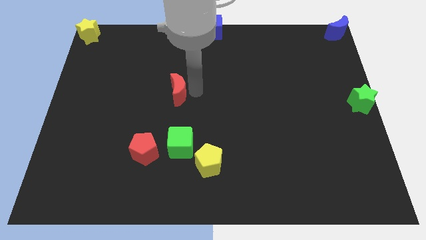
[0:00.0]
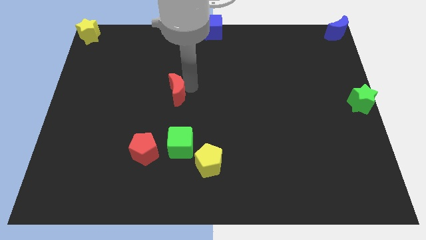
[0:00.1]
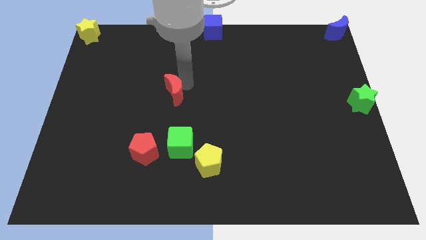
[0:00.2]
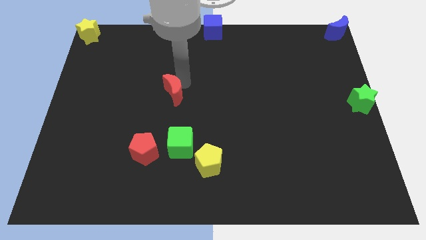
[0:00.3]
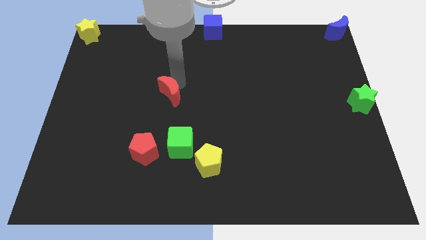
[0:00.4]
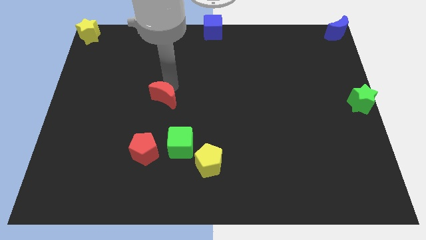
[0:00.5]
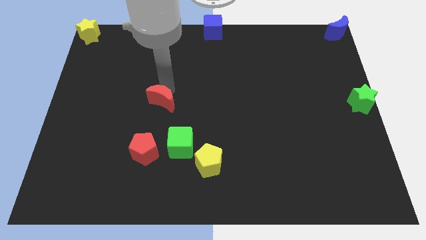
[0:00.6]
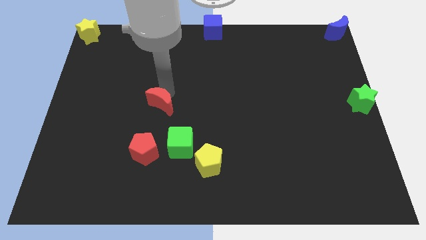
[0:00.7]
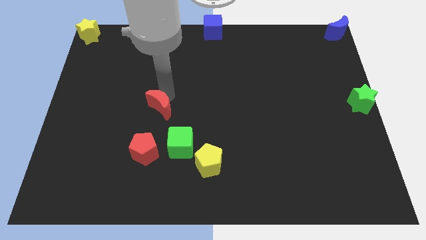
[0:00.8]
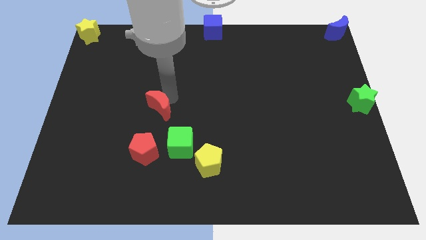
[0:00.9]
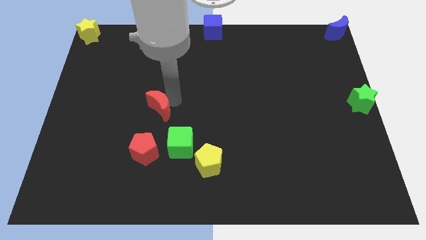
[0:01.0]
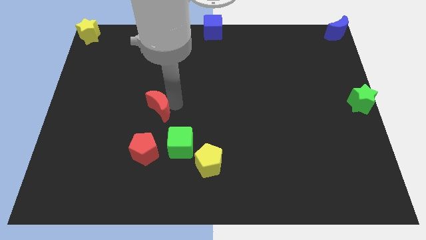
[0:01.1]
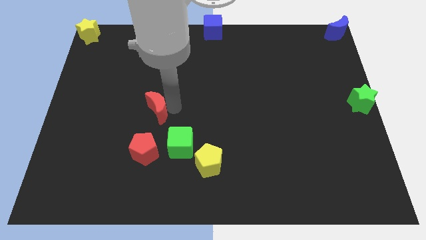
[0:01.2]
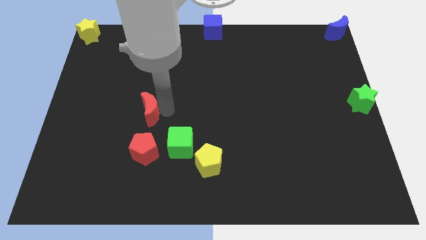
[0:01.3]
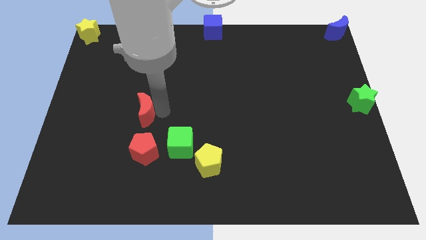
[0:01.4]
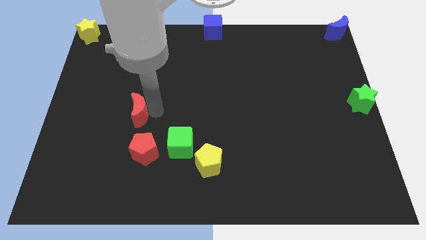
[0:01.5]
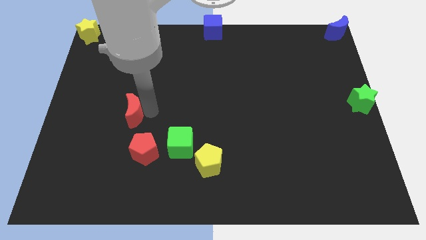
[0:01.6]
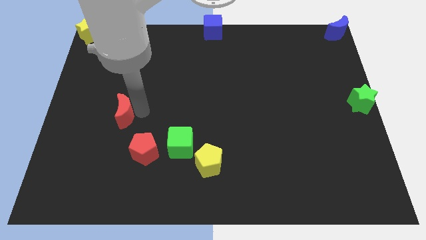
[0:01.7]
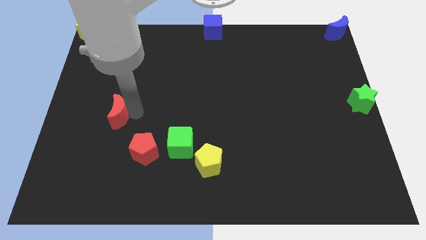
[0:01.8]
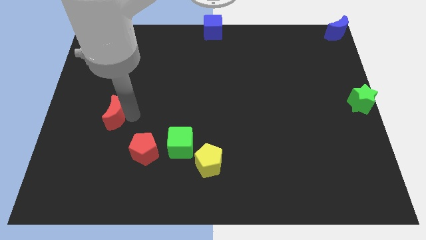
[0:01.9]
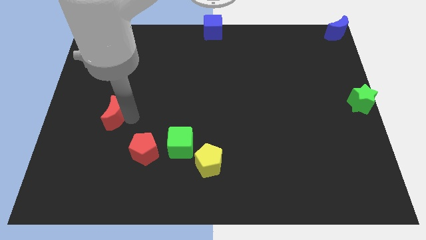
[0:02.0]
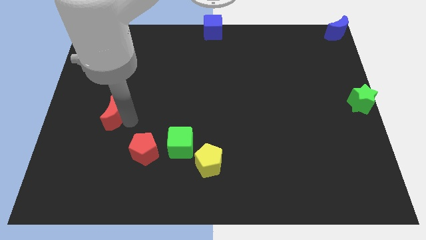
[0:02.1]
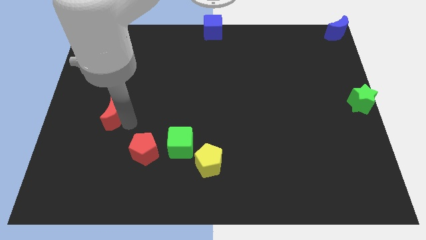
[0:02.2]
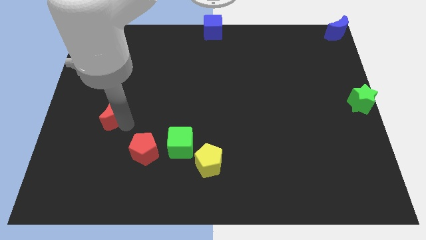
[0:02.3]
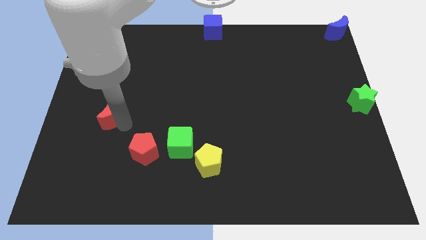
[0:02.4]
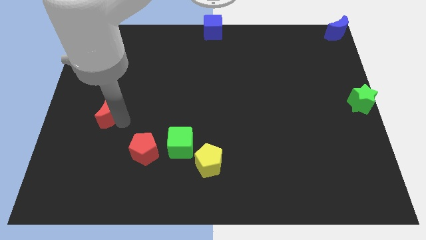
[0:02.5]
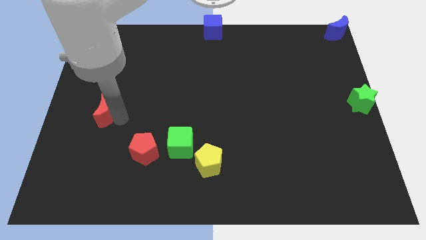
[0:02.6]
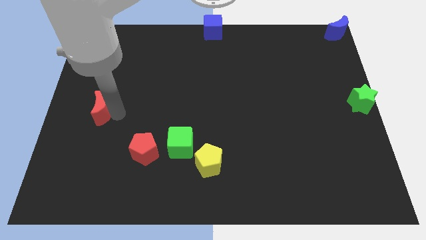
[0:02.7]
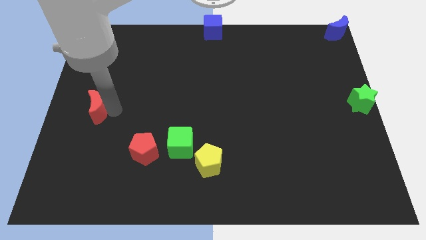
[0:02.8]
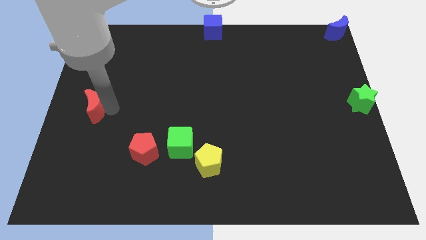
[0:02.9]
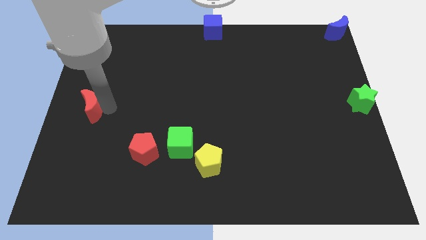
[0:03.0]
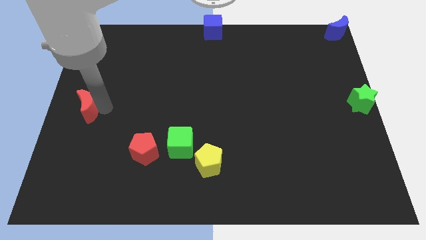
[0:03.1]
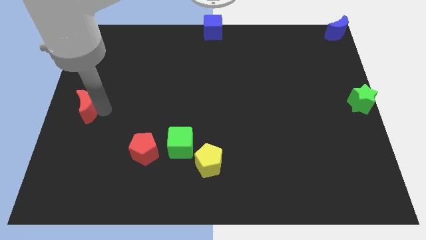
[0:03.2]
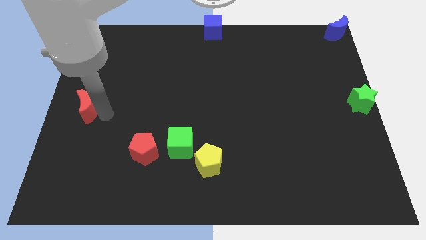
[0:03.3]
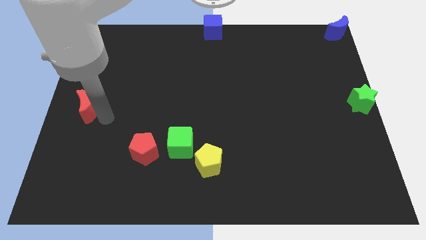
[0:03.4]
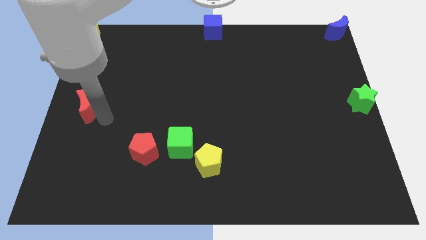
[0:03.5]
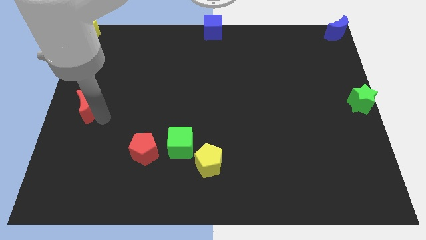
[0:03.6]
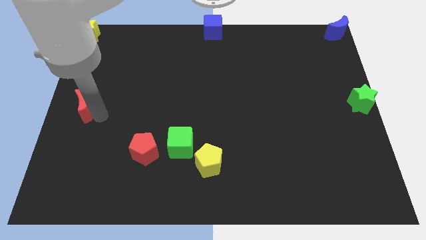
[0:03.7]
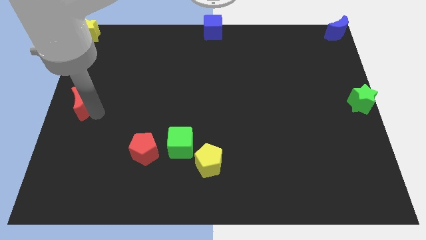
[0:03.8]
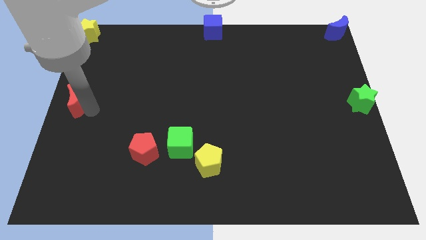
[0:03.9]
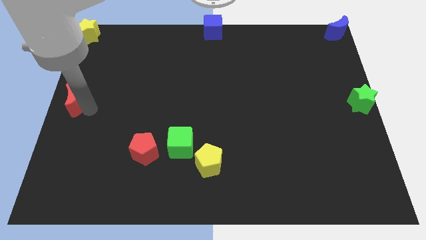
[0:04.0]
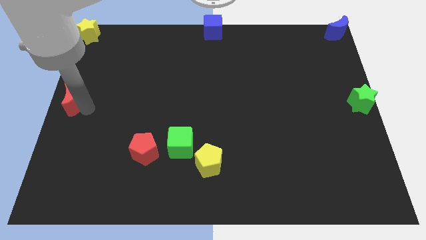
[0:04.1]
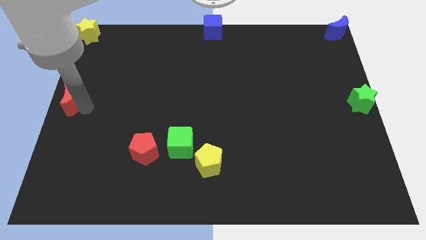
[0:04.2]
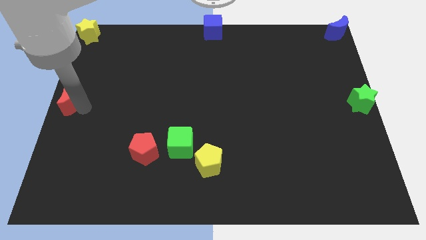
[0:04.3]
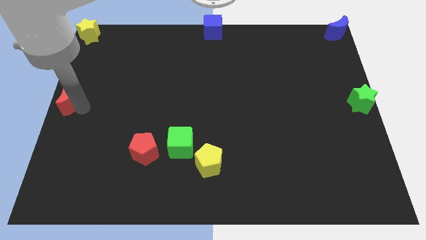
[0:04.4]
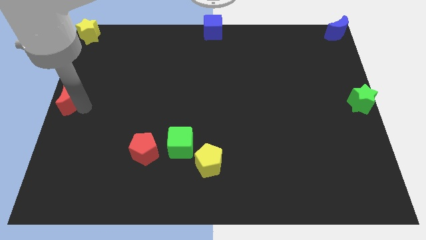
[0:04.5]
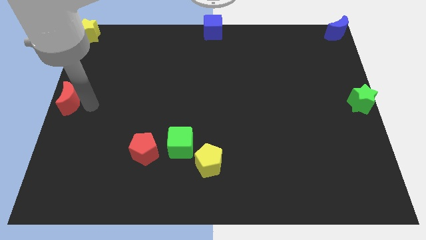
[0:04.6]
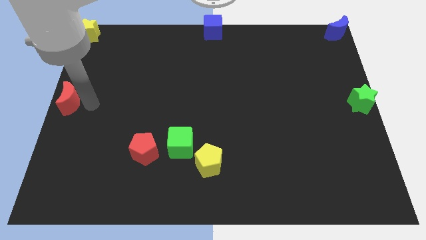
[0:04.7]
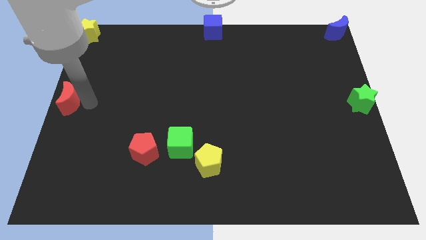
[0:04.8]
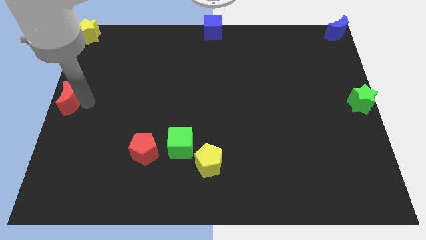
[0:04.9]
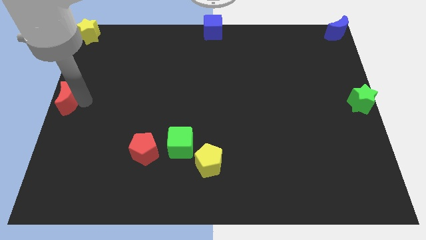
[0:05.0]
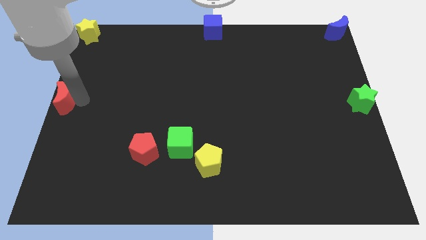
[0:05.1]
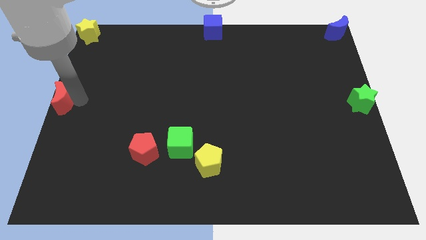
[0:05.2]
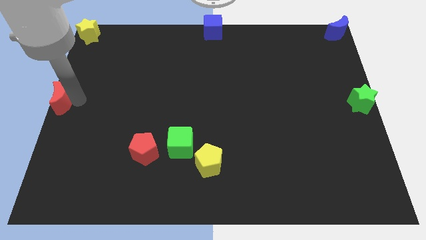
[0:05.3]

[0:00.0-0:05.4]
push the red moon to the center left of the board

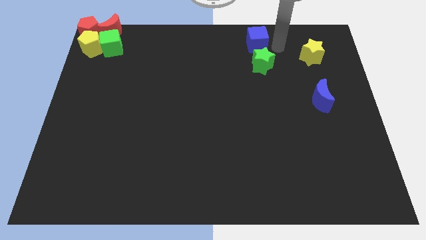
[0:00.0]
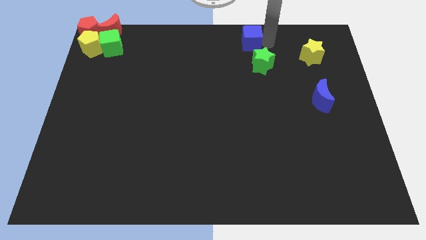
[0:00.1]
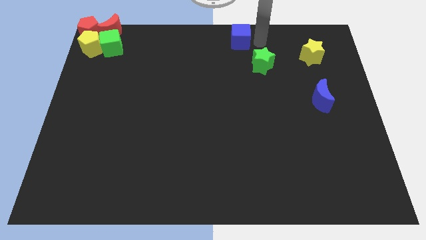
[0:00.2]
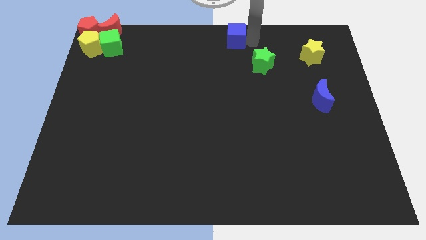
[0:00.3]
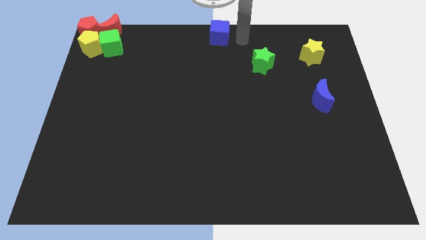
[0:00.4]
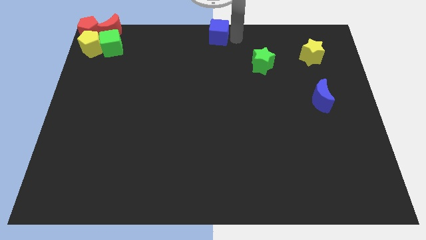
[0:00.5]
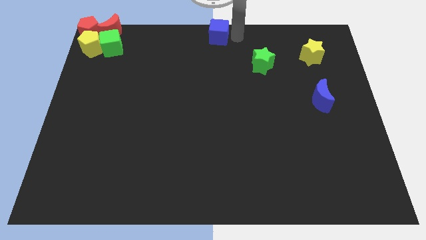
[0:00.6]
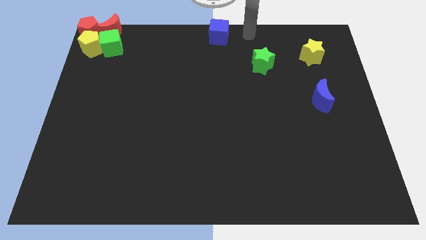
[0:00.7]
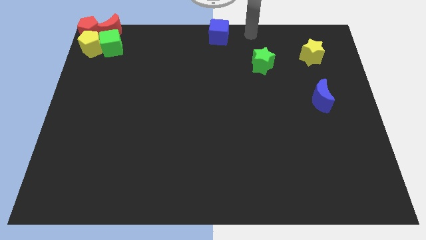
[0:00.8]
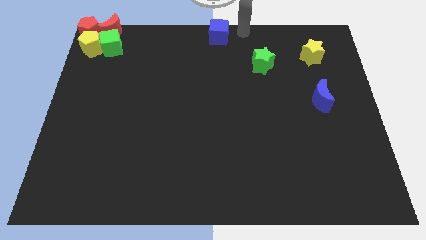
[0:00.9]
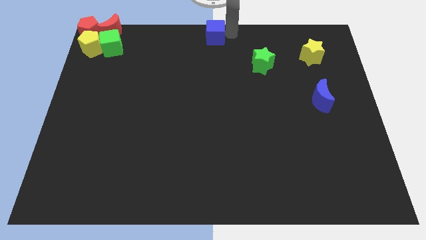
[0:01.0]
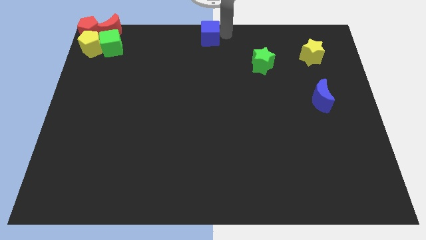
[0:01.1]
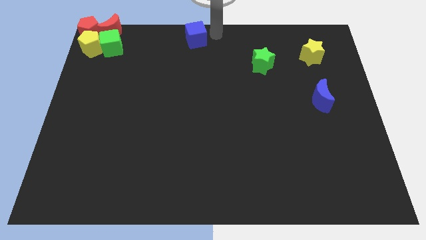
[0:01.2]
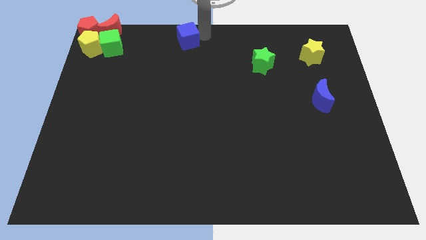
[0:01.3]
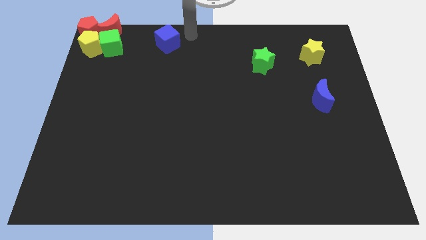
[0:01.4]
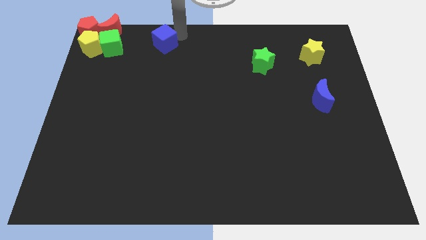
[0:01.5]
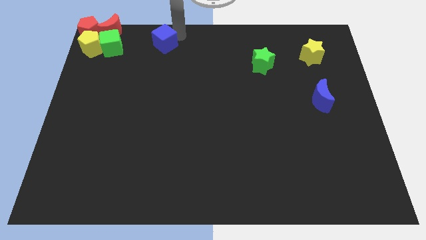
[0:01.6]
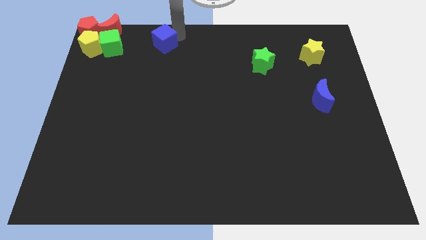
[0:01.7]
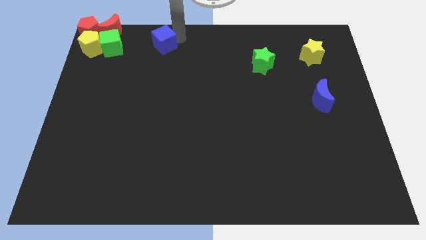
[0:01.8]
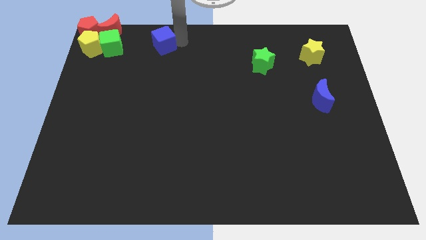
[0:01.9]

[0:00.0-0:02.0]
push the blue cube towards green cube

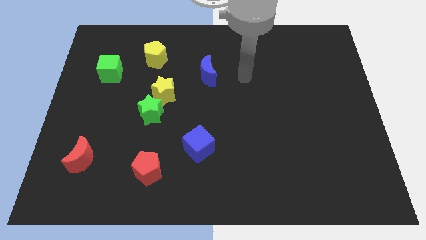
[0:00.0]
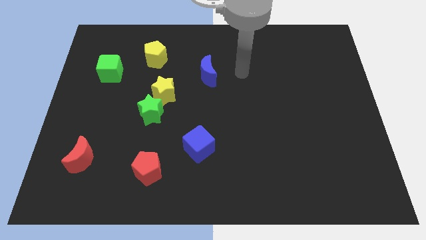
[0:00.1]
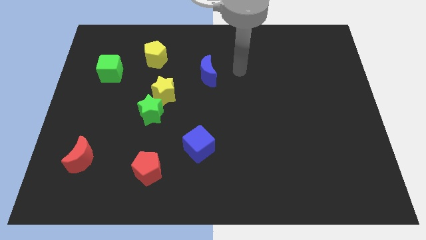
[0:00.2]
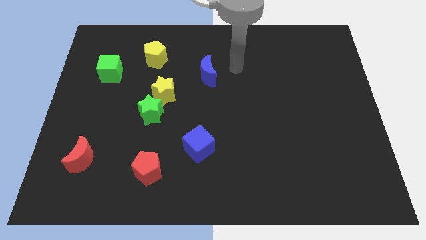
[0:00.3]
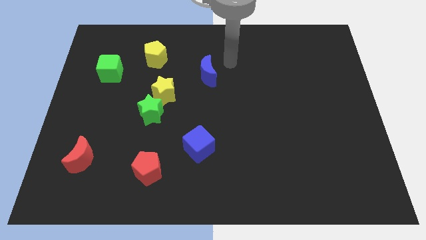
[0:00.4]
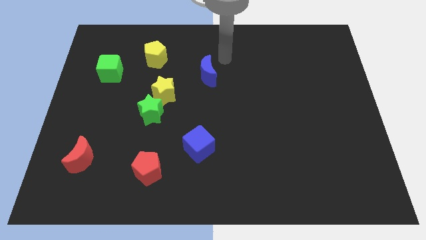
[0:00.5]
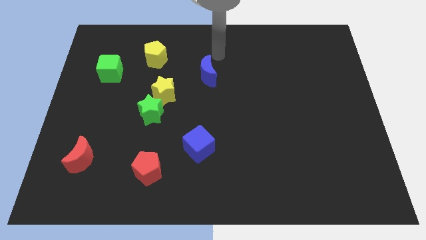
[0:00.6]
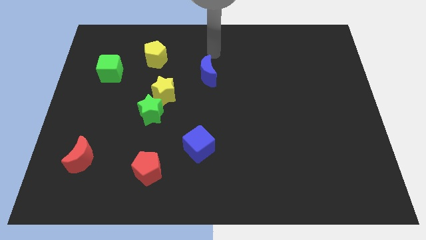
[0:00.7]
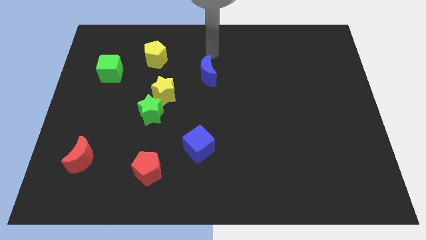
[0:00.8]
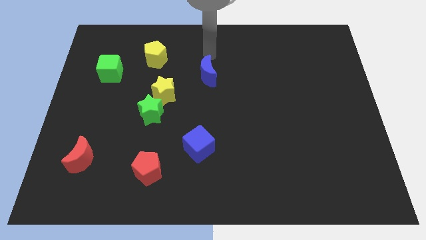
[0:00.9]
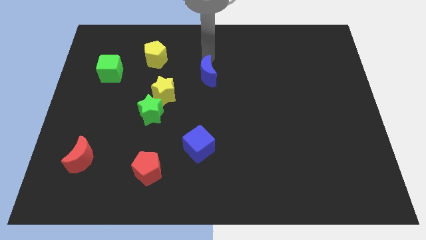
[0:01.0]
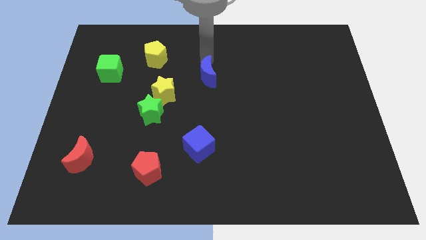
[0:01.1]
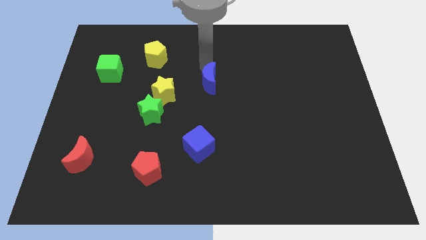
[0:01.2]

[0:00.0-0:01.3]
push the blue moon to the bottom slightly on the board
